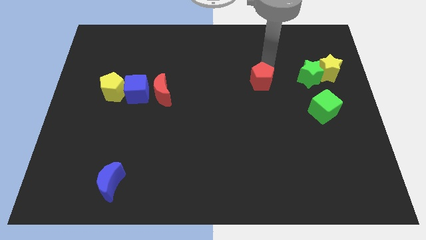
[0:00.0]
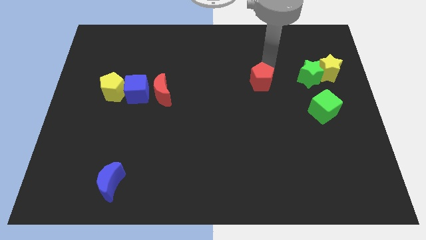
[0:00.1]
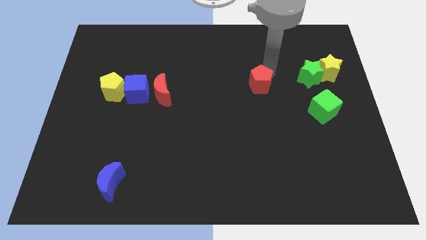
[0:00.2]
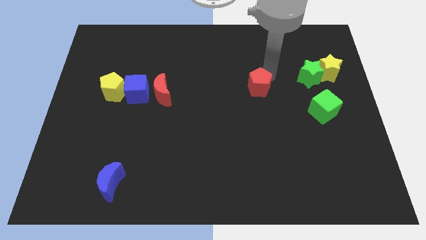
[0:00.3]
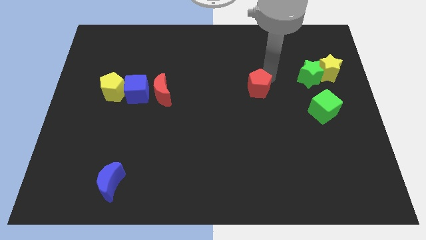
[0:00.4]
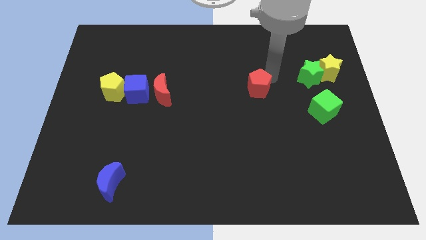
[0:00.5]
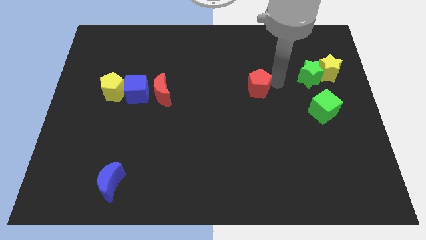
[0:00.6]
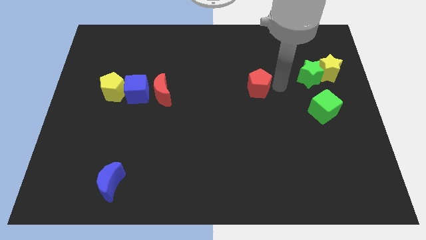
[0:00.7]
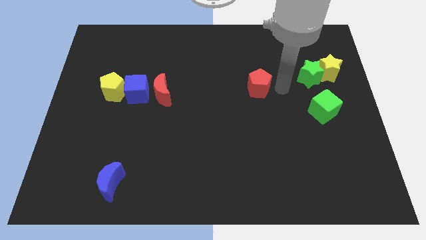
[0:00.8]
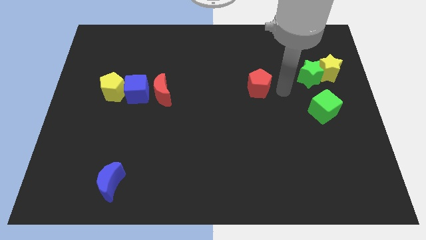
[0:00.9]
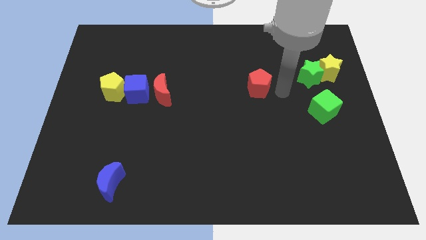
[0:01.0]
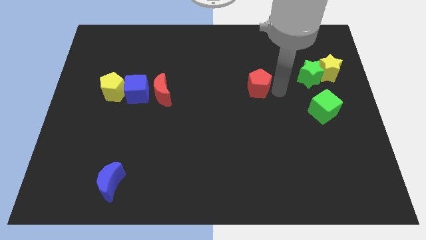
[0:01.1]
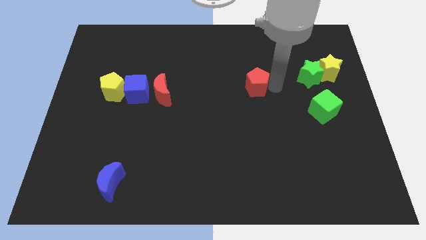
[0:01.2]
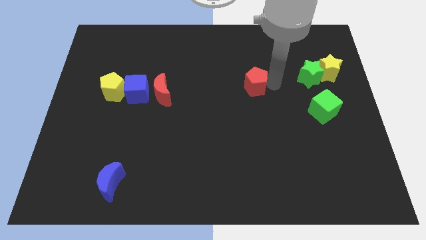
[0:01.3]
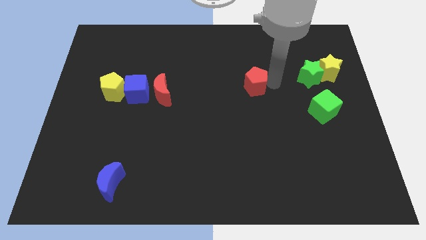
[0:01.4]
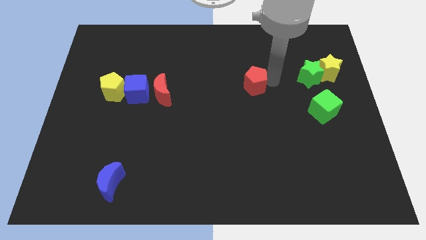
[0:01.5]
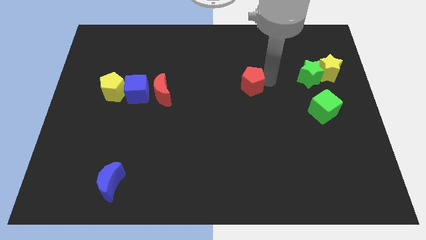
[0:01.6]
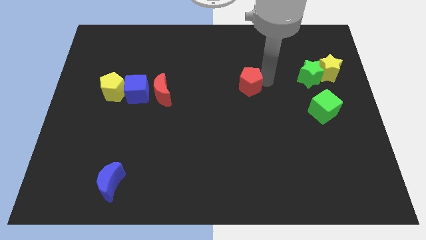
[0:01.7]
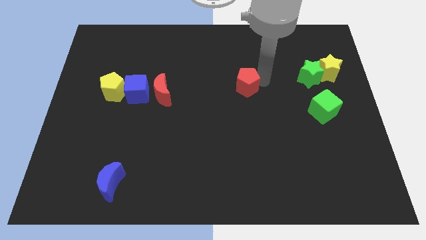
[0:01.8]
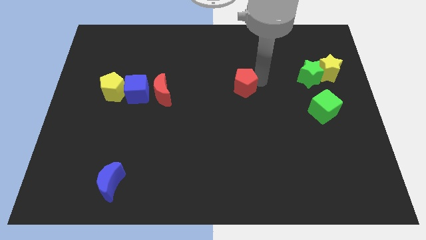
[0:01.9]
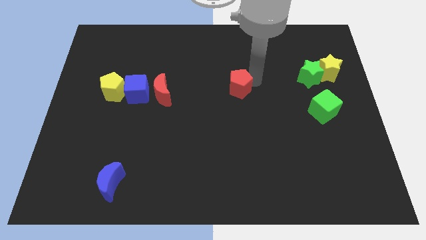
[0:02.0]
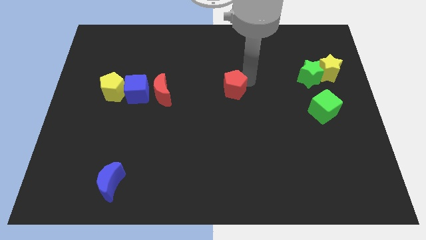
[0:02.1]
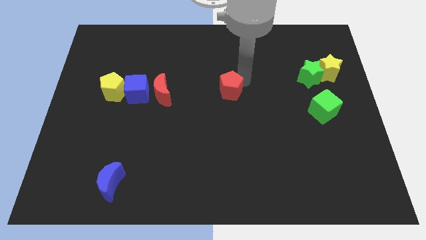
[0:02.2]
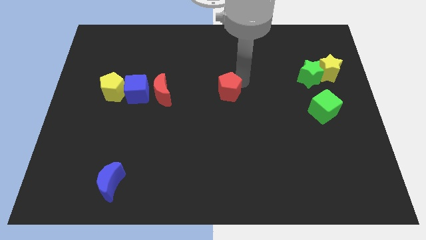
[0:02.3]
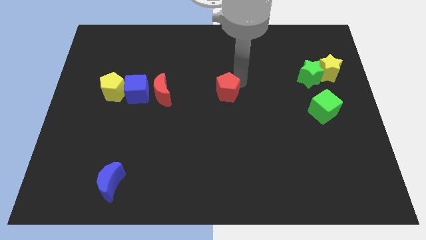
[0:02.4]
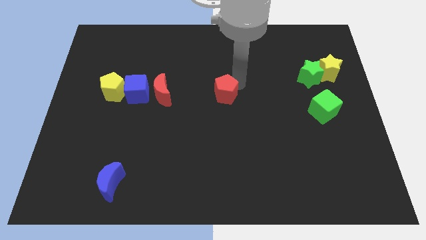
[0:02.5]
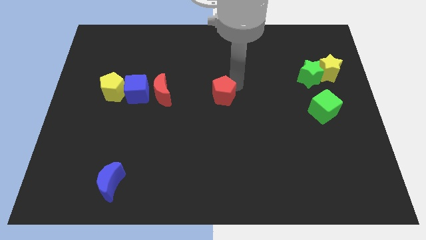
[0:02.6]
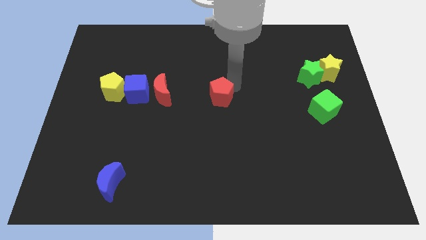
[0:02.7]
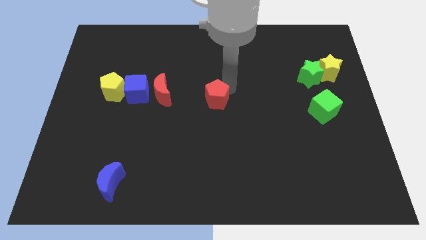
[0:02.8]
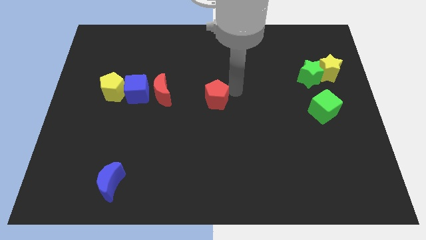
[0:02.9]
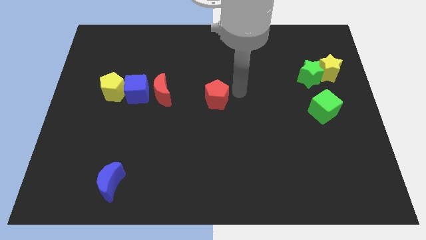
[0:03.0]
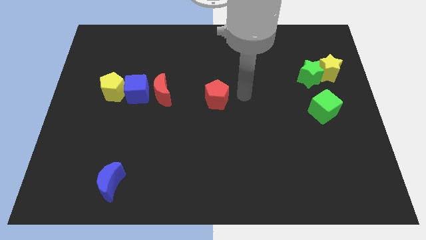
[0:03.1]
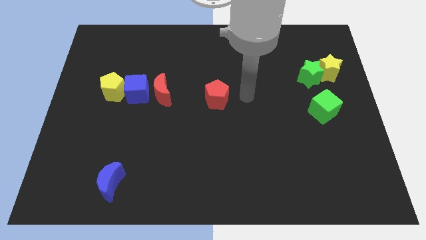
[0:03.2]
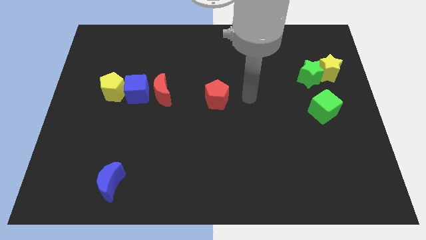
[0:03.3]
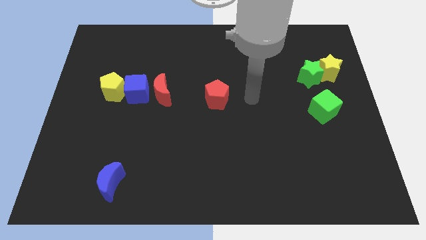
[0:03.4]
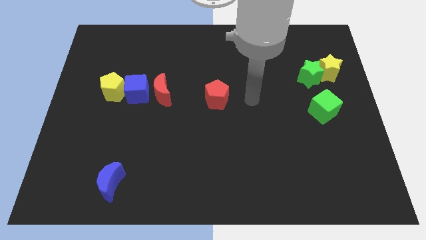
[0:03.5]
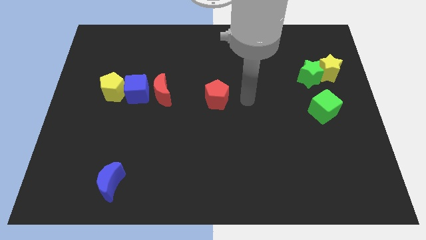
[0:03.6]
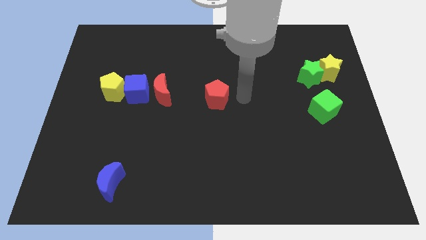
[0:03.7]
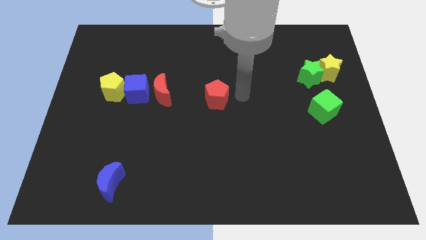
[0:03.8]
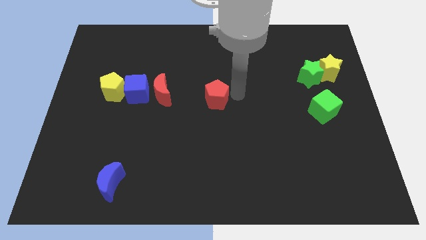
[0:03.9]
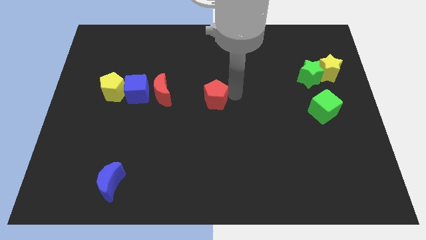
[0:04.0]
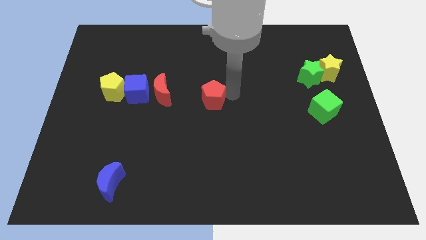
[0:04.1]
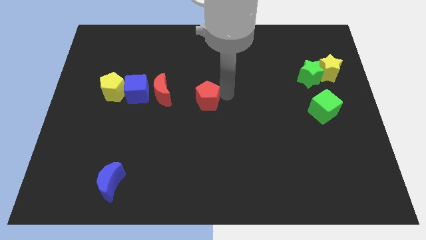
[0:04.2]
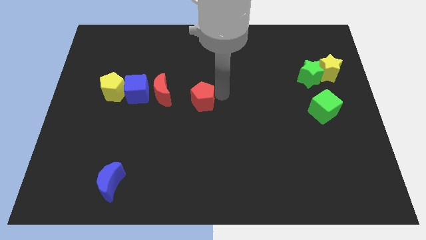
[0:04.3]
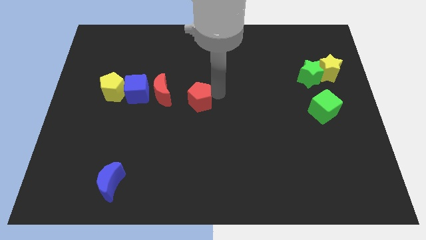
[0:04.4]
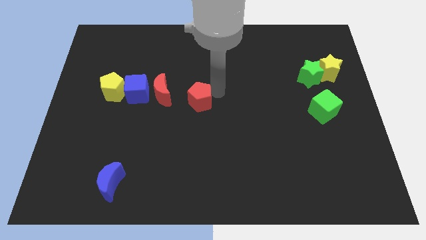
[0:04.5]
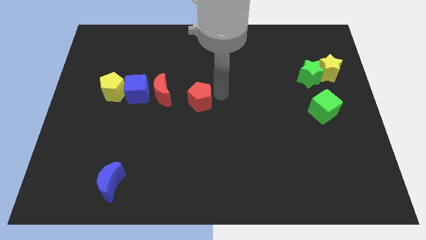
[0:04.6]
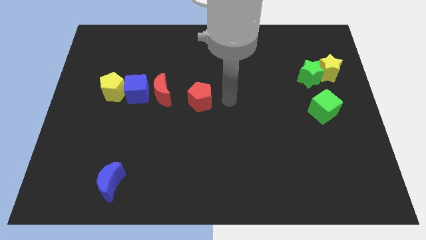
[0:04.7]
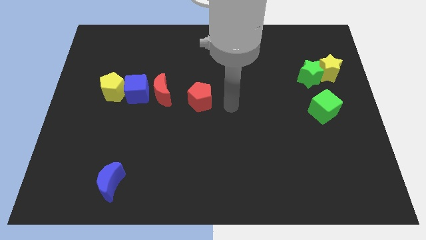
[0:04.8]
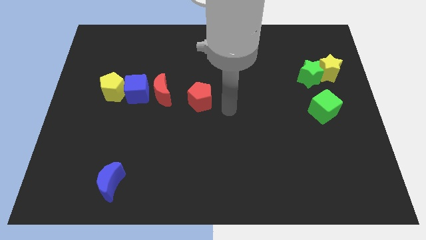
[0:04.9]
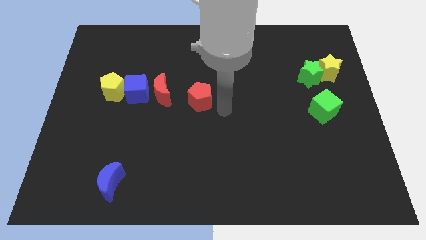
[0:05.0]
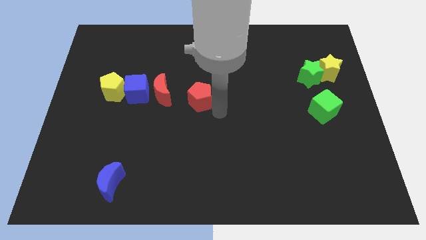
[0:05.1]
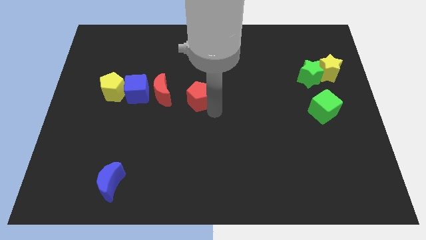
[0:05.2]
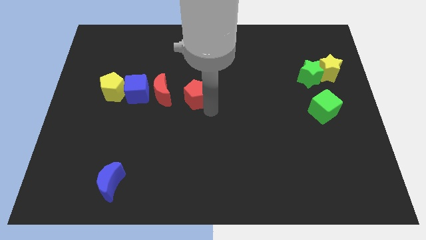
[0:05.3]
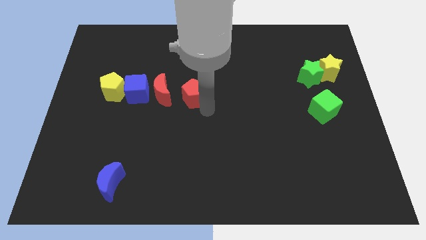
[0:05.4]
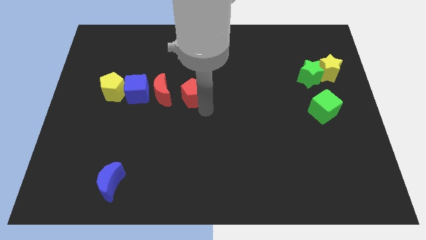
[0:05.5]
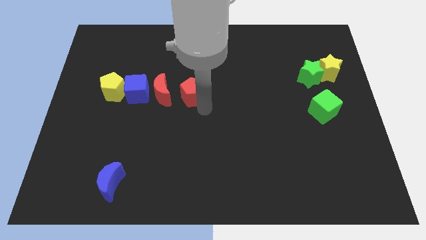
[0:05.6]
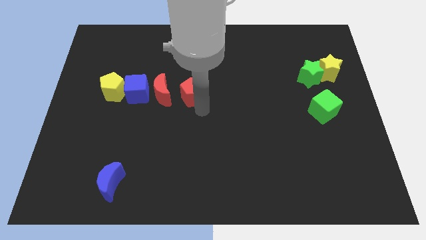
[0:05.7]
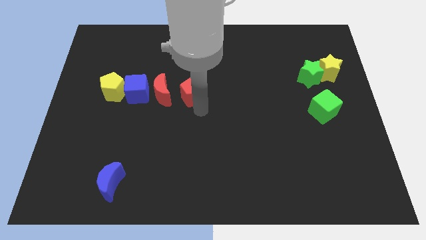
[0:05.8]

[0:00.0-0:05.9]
move red pentagon to the right of red crescent

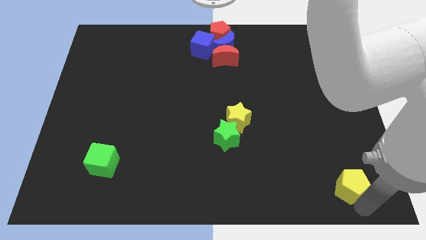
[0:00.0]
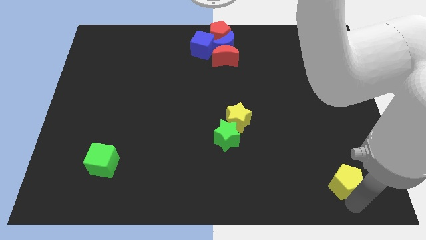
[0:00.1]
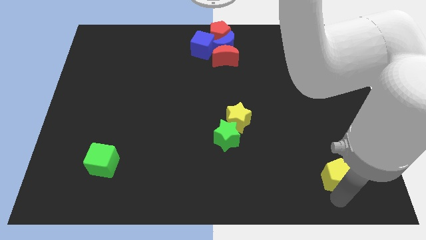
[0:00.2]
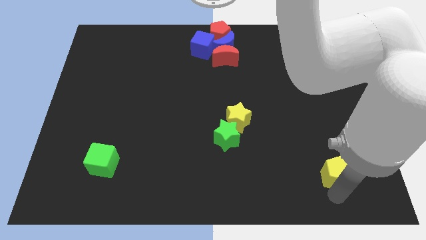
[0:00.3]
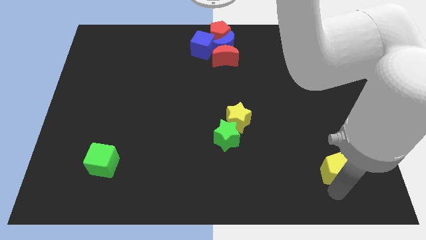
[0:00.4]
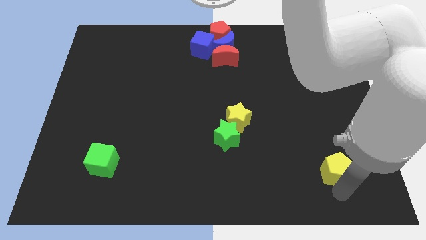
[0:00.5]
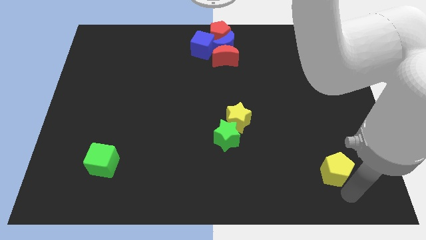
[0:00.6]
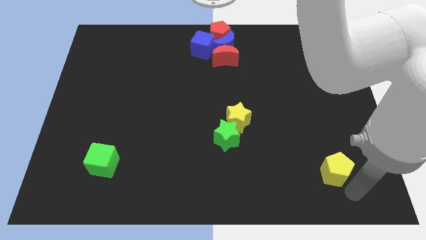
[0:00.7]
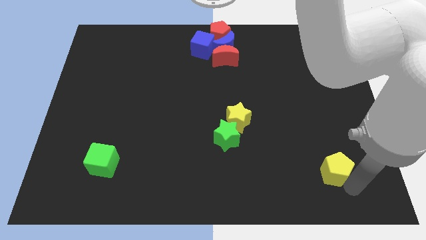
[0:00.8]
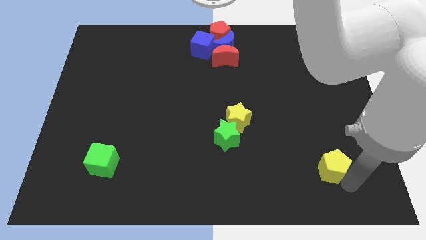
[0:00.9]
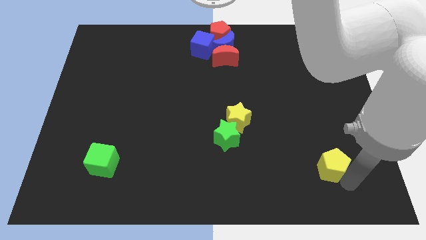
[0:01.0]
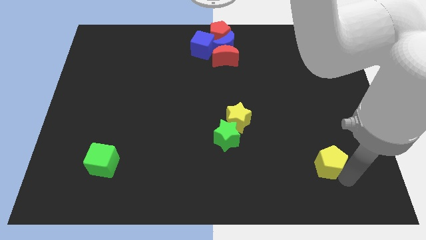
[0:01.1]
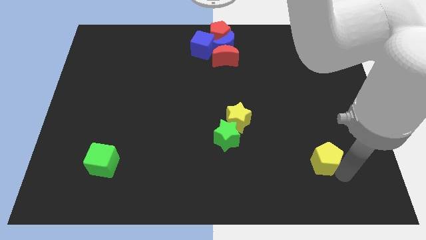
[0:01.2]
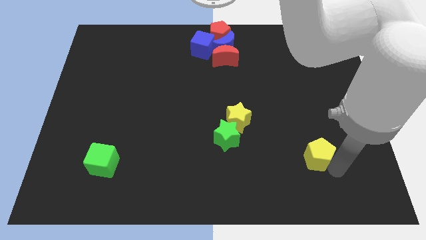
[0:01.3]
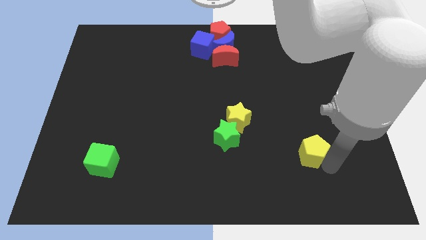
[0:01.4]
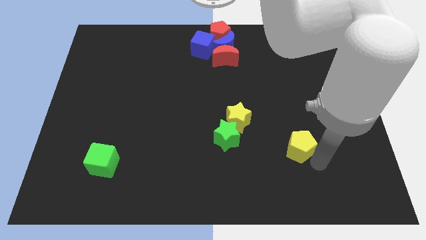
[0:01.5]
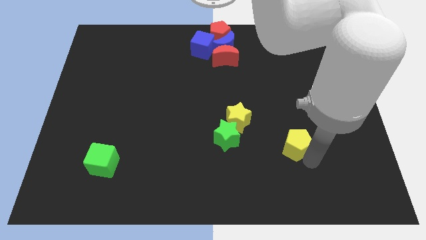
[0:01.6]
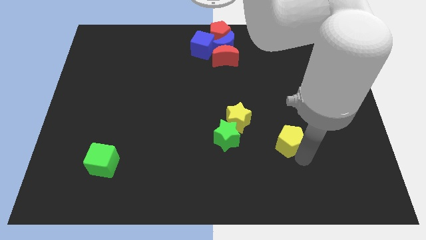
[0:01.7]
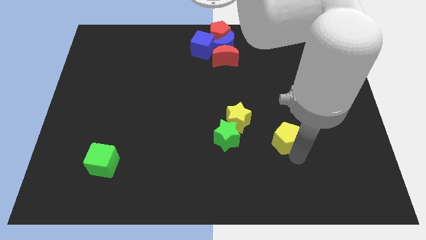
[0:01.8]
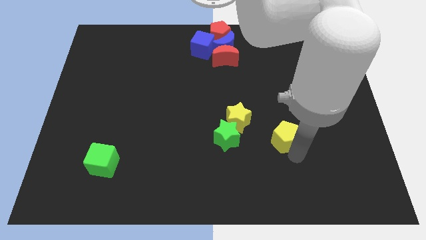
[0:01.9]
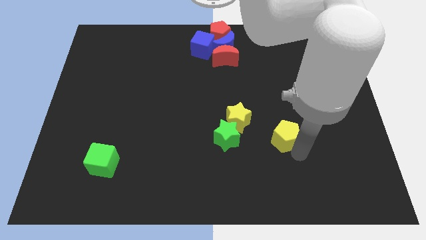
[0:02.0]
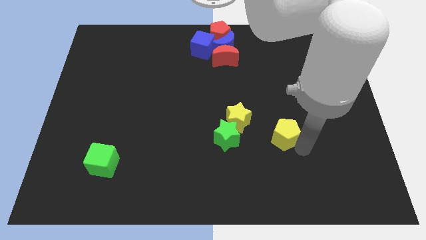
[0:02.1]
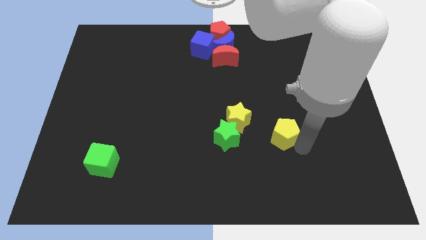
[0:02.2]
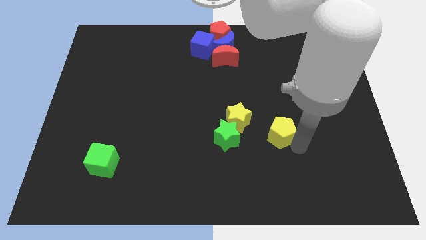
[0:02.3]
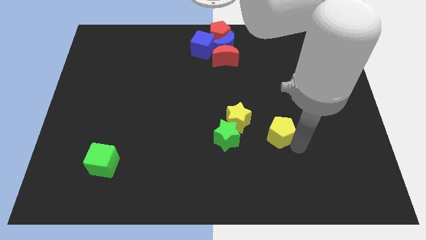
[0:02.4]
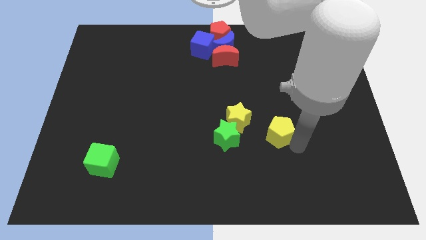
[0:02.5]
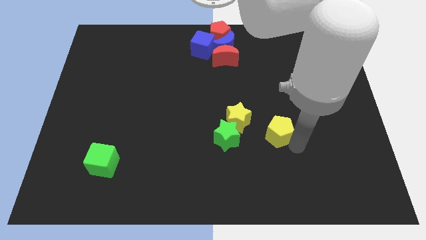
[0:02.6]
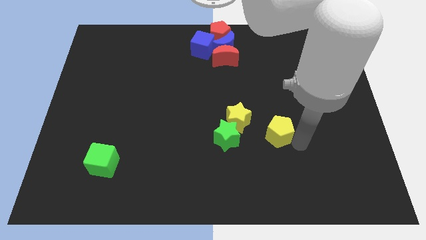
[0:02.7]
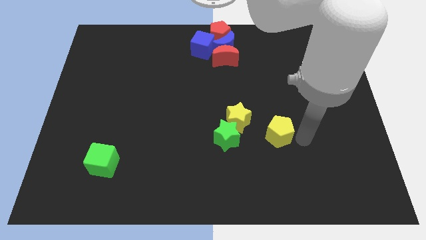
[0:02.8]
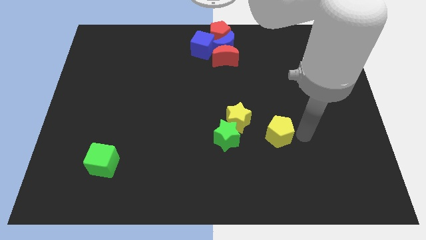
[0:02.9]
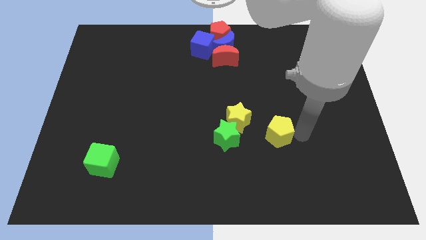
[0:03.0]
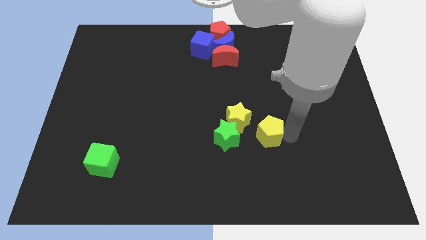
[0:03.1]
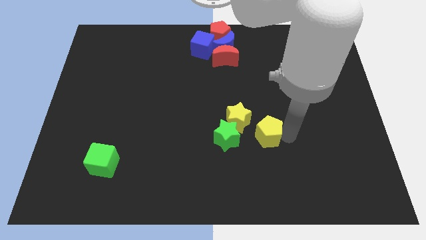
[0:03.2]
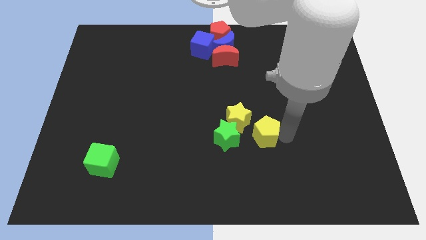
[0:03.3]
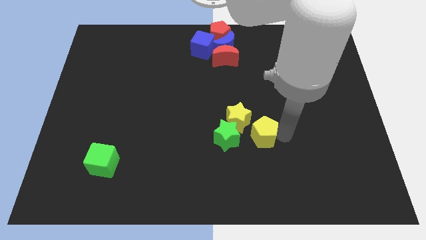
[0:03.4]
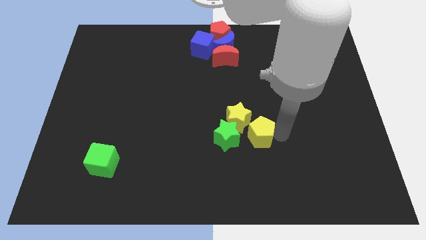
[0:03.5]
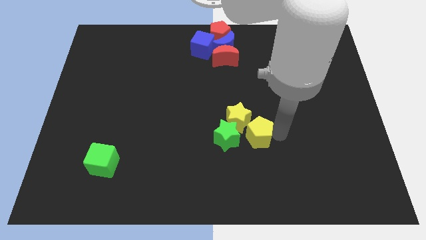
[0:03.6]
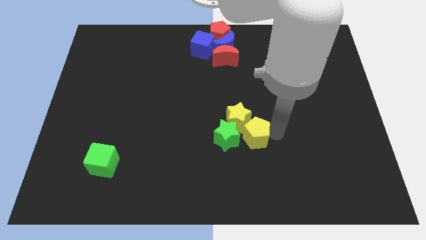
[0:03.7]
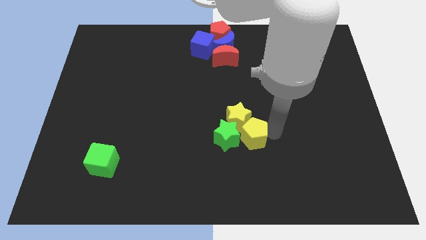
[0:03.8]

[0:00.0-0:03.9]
push the yellow pentagon close to the yellow and green star
